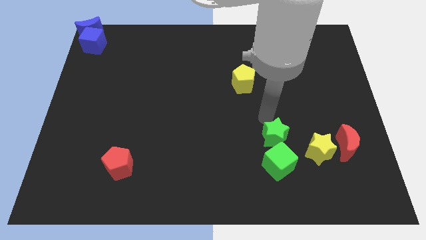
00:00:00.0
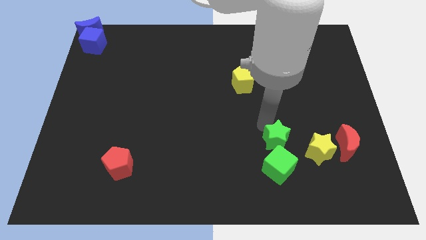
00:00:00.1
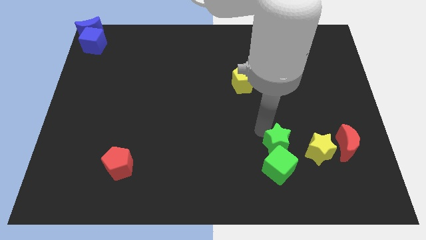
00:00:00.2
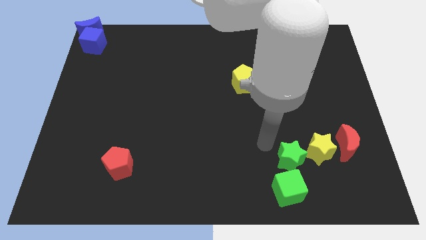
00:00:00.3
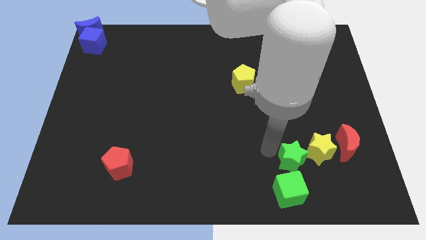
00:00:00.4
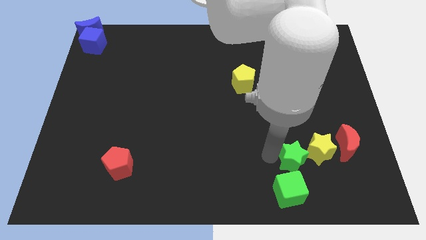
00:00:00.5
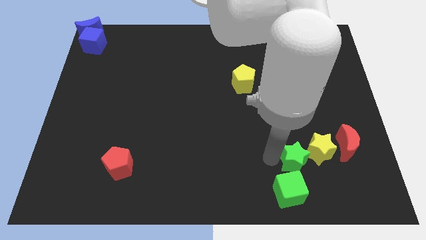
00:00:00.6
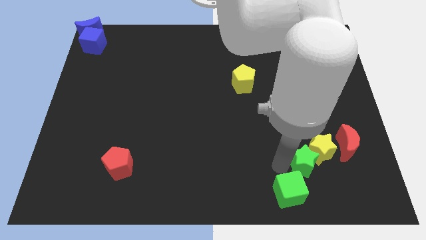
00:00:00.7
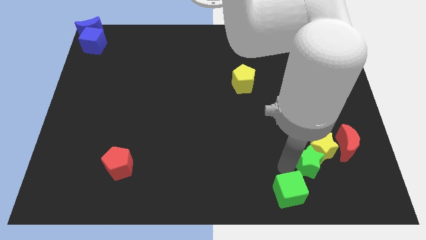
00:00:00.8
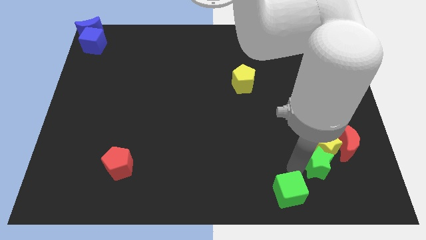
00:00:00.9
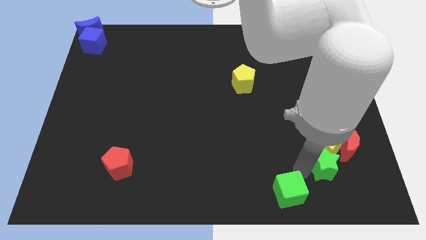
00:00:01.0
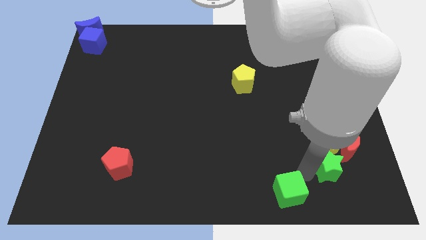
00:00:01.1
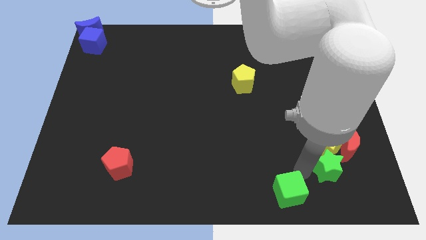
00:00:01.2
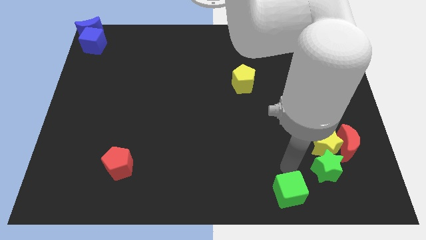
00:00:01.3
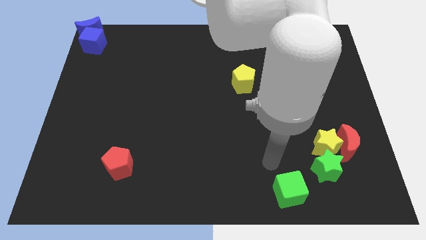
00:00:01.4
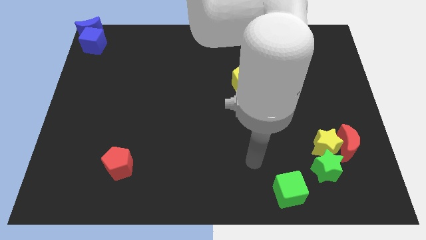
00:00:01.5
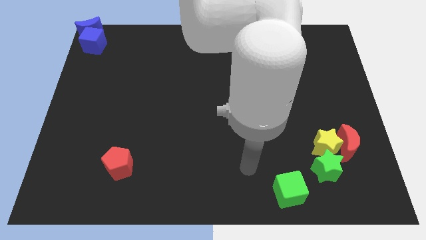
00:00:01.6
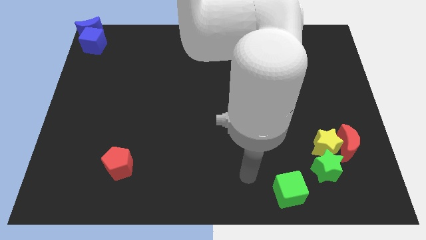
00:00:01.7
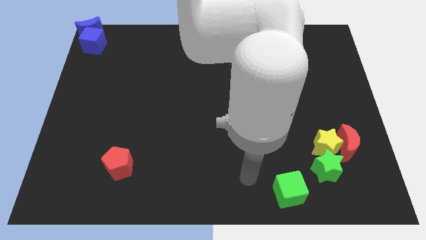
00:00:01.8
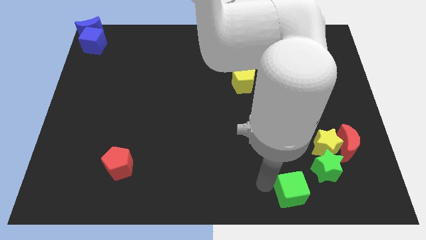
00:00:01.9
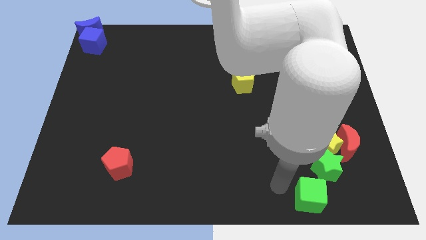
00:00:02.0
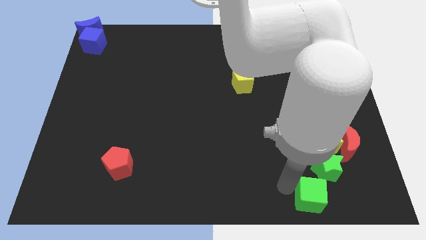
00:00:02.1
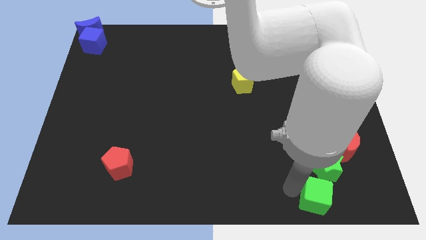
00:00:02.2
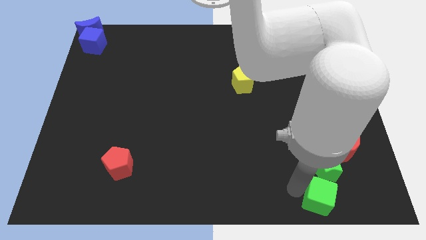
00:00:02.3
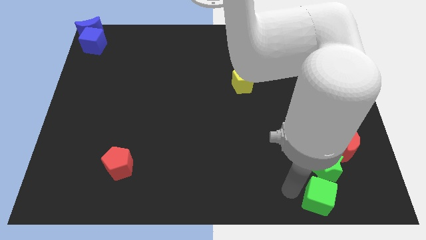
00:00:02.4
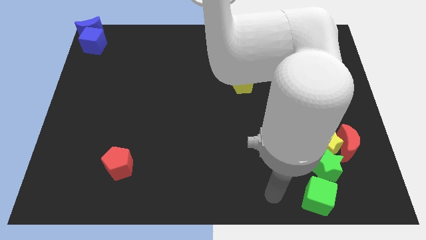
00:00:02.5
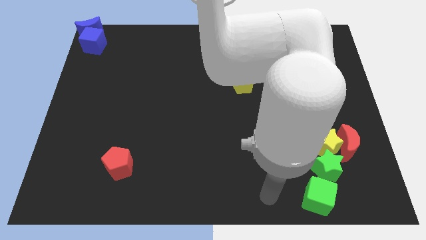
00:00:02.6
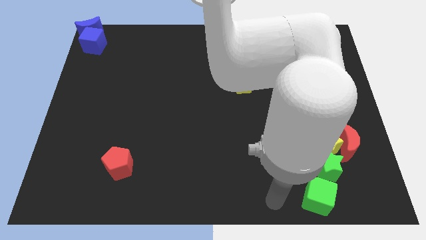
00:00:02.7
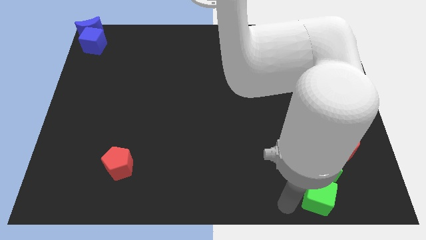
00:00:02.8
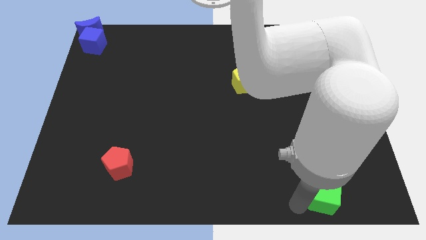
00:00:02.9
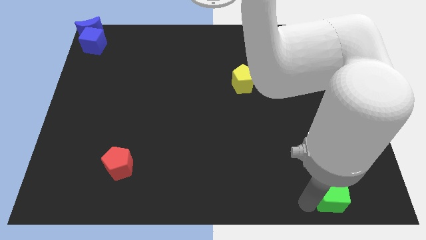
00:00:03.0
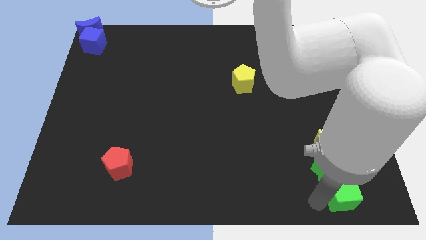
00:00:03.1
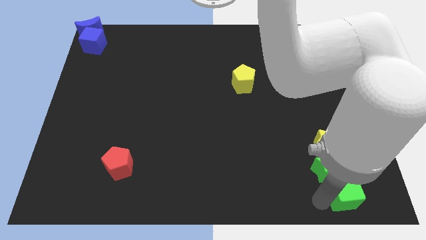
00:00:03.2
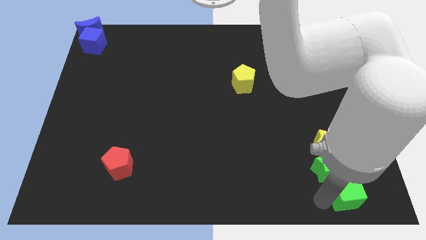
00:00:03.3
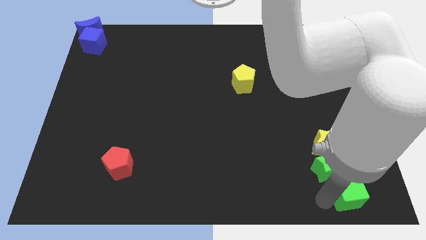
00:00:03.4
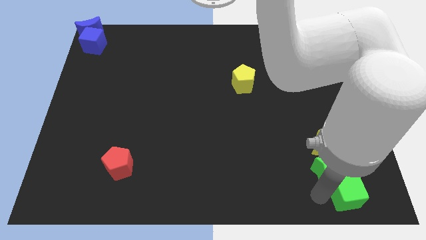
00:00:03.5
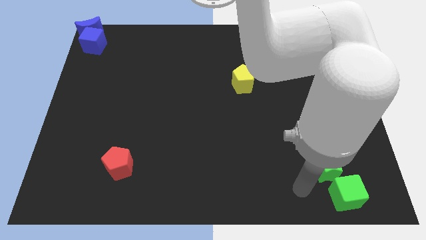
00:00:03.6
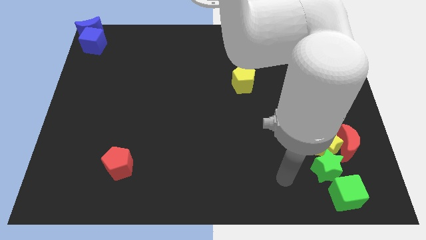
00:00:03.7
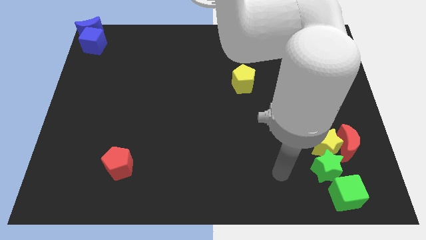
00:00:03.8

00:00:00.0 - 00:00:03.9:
push the green blocks to the bottom right

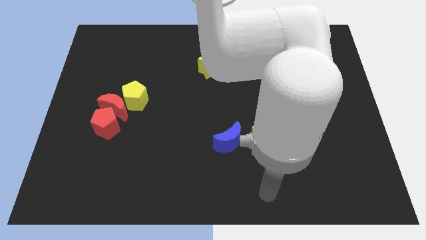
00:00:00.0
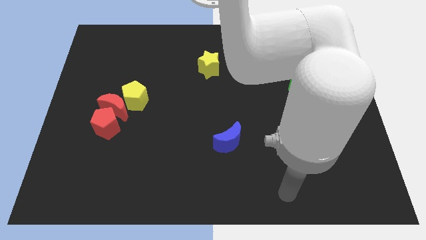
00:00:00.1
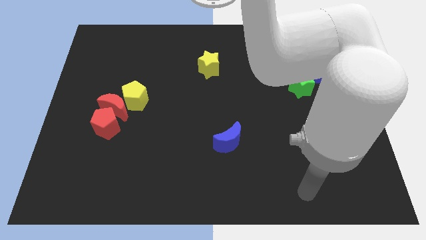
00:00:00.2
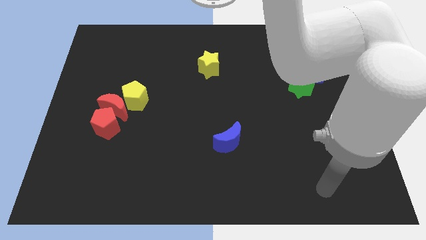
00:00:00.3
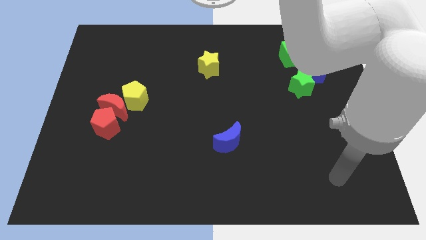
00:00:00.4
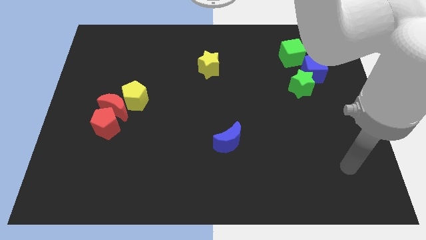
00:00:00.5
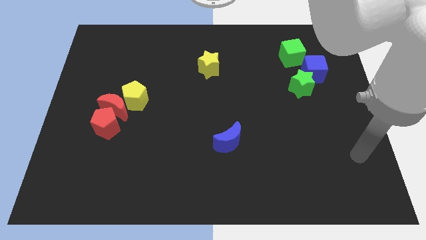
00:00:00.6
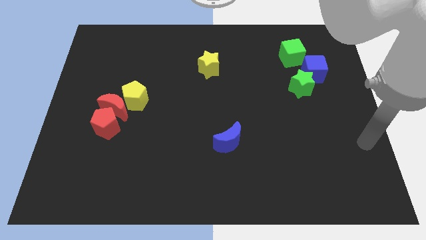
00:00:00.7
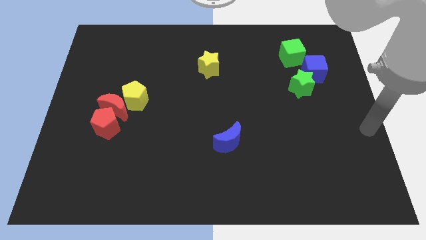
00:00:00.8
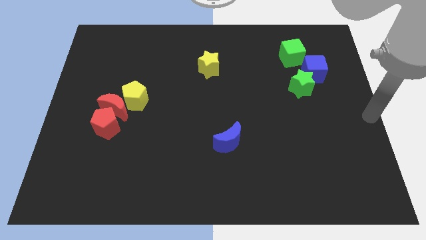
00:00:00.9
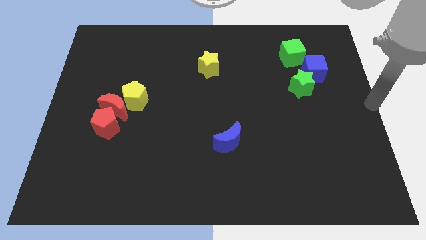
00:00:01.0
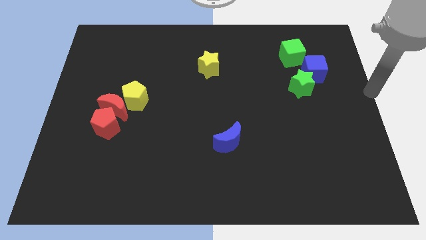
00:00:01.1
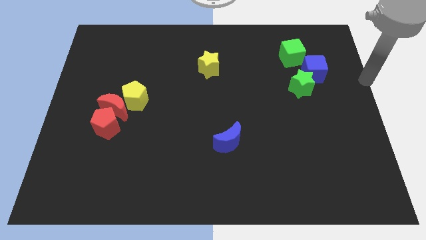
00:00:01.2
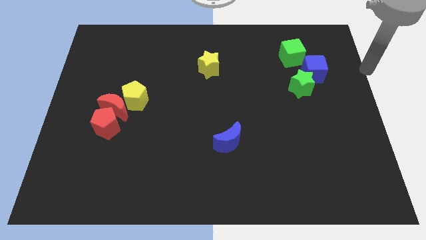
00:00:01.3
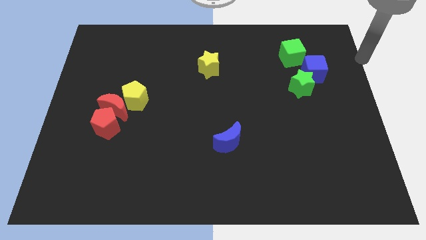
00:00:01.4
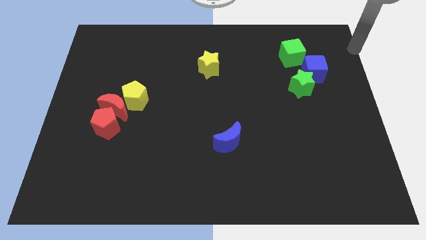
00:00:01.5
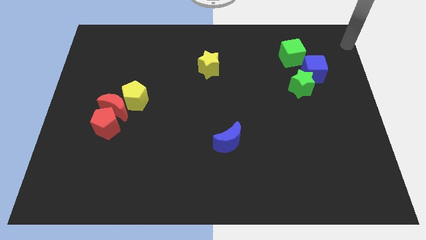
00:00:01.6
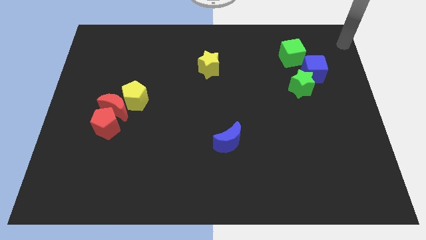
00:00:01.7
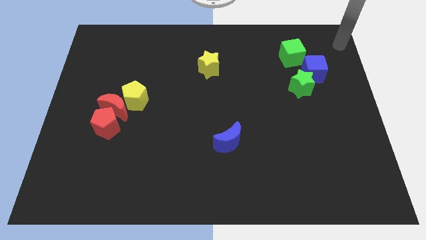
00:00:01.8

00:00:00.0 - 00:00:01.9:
move your arm towards the top right corner of the board

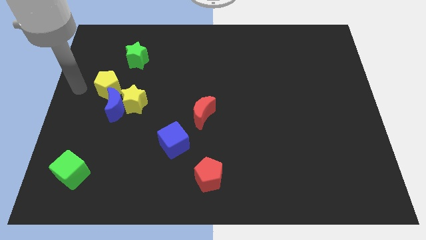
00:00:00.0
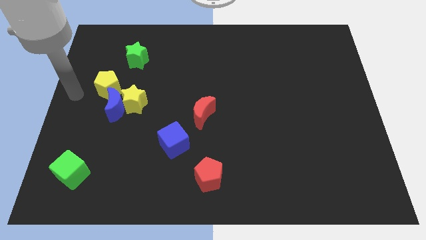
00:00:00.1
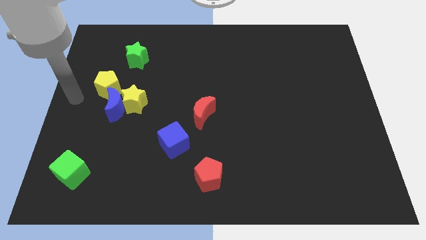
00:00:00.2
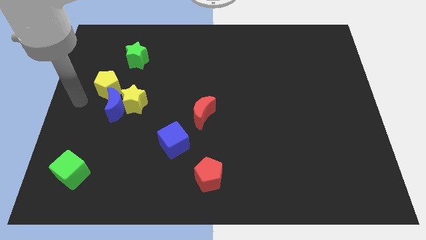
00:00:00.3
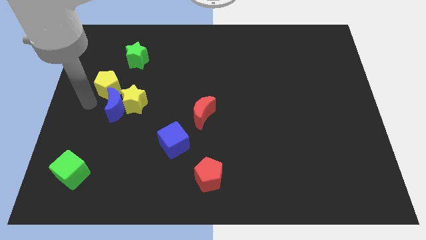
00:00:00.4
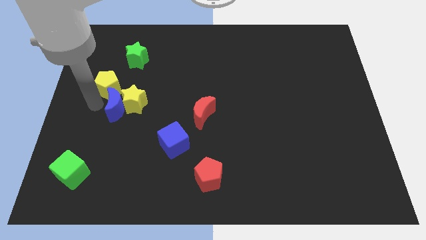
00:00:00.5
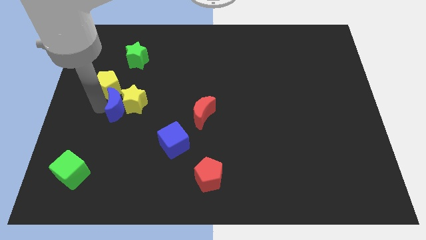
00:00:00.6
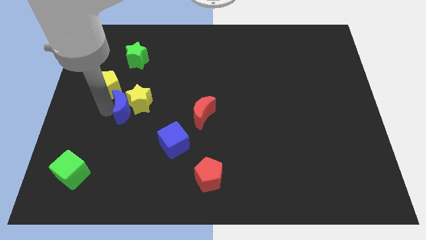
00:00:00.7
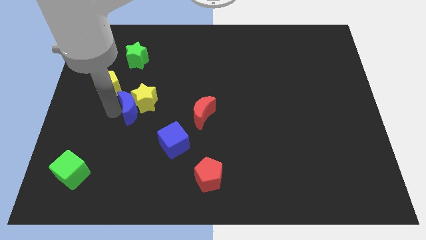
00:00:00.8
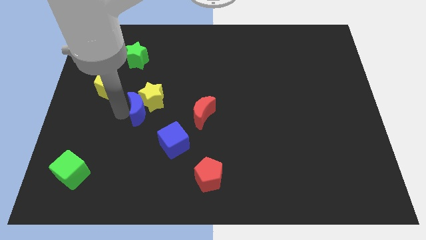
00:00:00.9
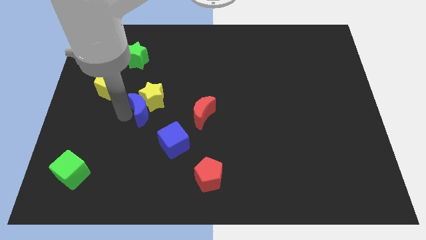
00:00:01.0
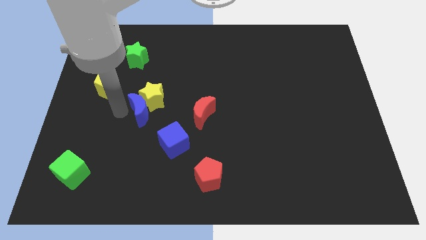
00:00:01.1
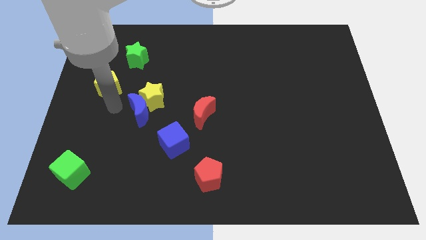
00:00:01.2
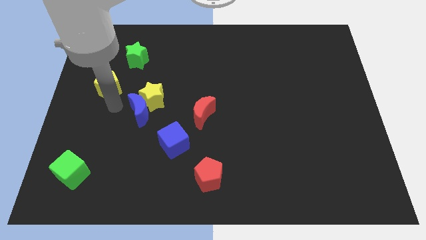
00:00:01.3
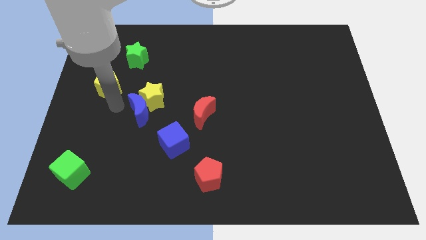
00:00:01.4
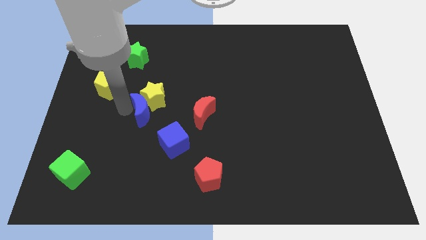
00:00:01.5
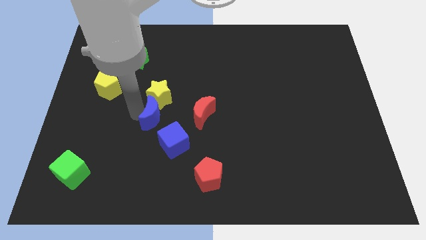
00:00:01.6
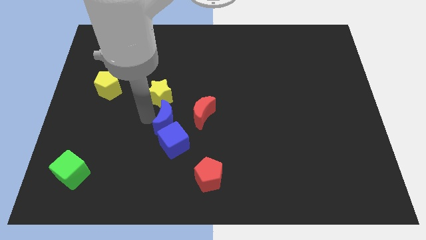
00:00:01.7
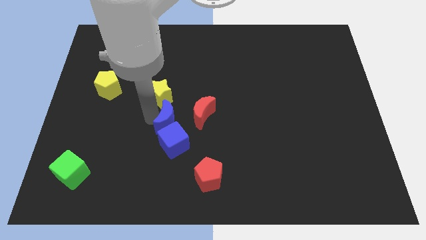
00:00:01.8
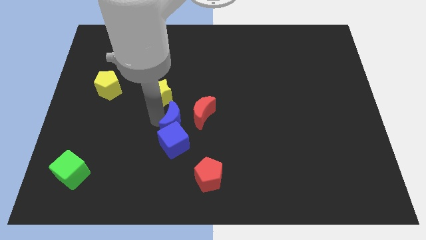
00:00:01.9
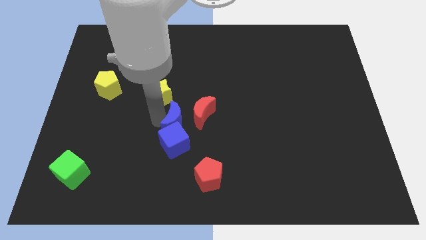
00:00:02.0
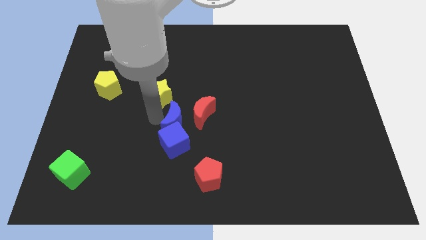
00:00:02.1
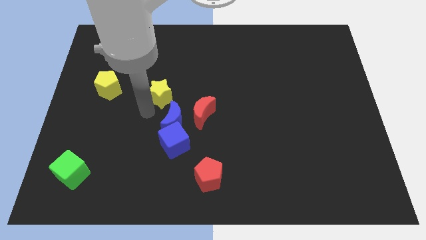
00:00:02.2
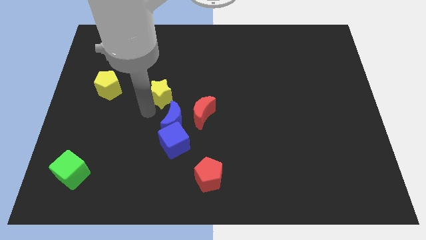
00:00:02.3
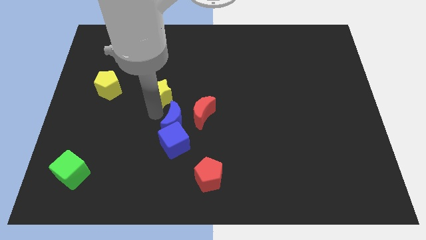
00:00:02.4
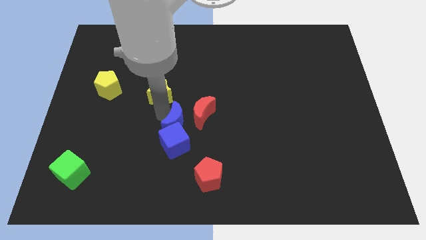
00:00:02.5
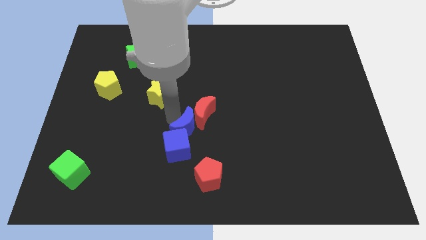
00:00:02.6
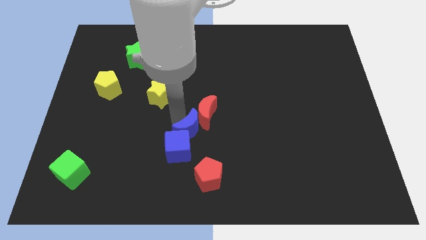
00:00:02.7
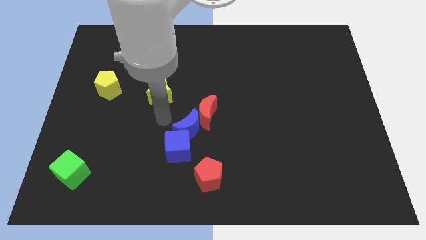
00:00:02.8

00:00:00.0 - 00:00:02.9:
push blue crescent towards red crescent and blue cube

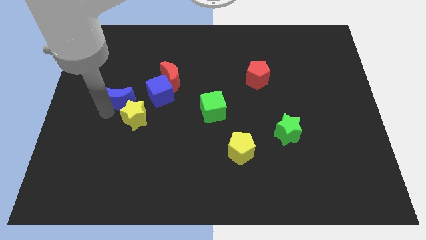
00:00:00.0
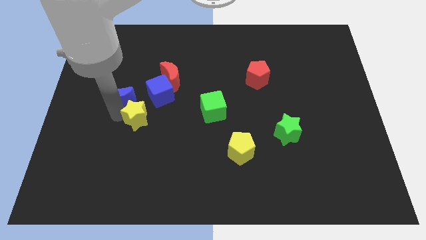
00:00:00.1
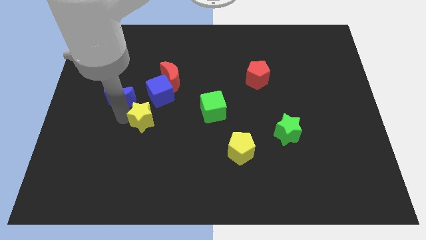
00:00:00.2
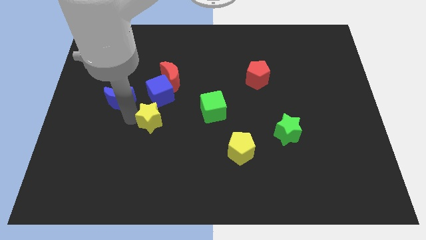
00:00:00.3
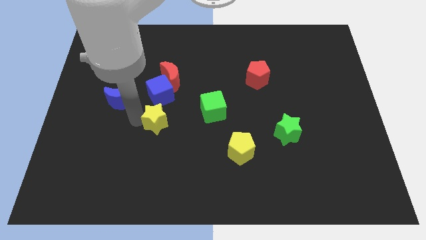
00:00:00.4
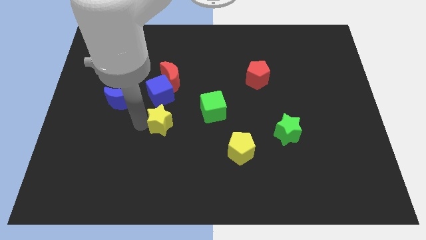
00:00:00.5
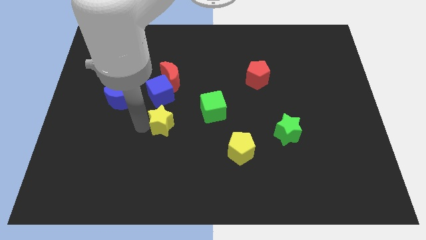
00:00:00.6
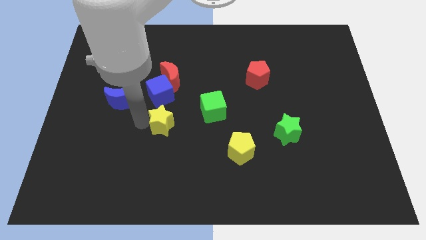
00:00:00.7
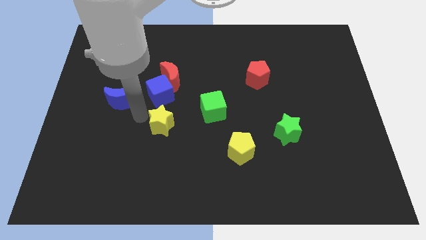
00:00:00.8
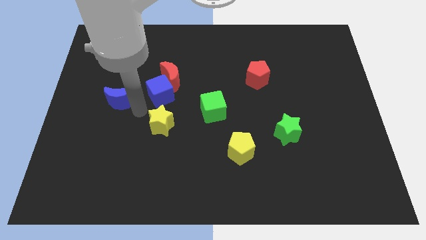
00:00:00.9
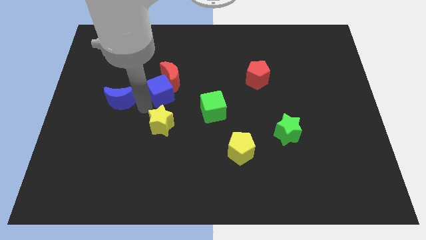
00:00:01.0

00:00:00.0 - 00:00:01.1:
move the yellow star to the bottom of the blue cube
